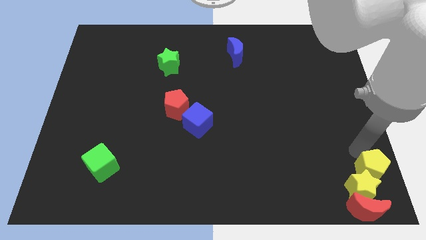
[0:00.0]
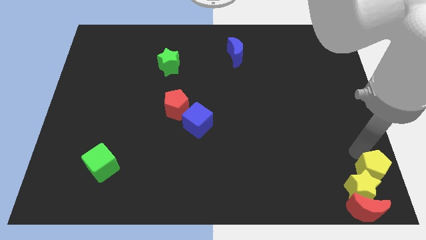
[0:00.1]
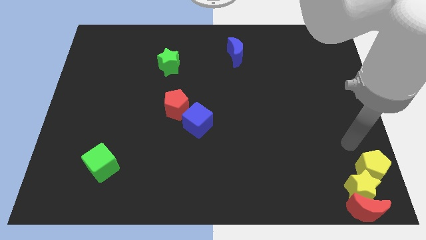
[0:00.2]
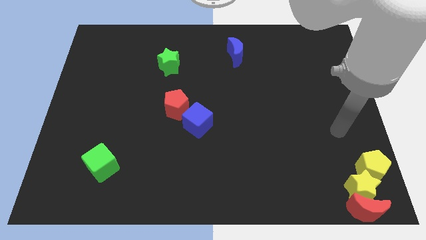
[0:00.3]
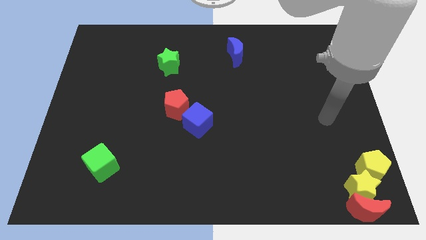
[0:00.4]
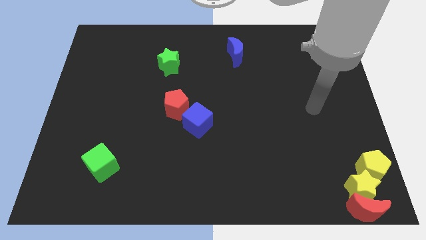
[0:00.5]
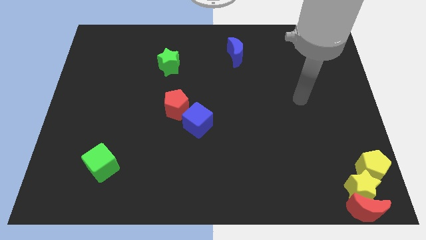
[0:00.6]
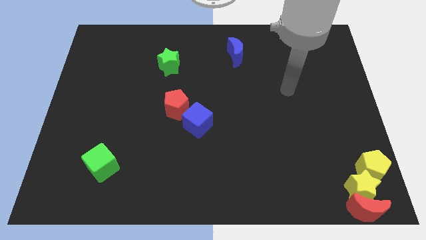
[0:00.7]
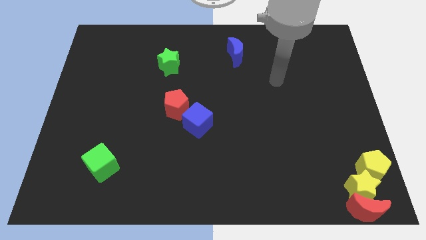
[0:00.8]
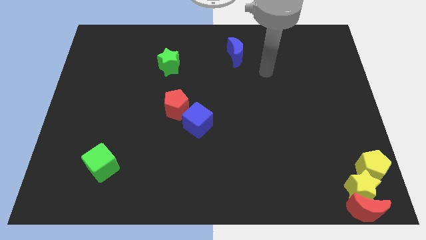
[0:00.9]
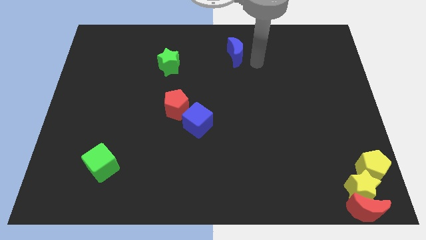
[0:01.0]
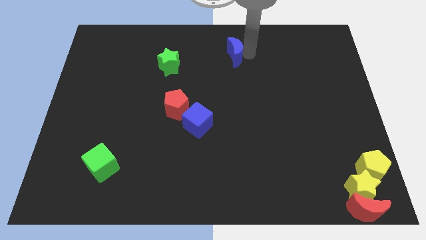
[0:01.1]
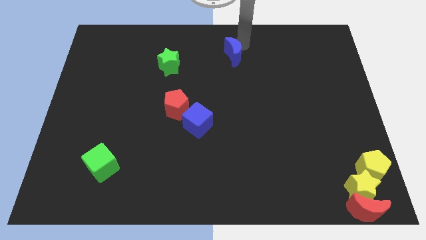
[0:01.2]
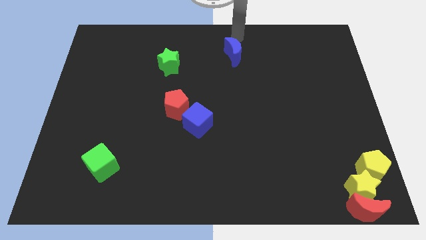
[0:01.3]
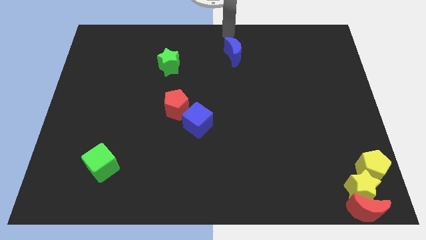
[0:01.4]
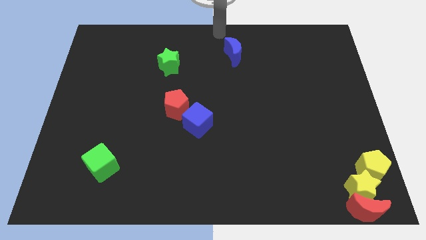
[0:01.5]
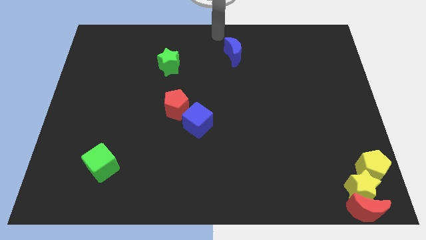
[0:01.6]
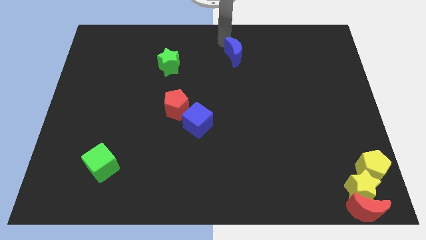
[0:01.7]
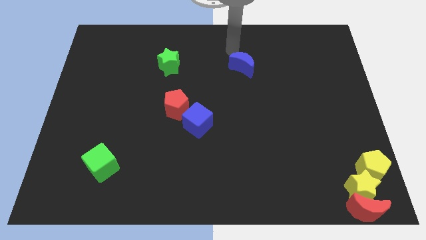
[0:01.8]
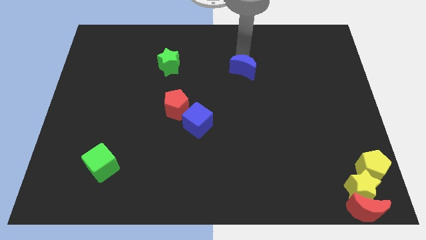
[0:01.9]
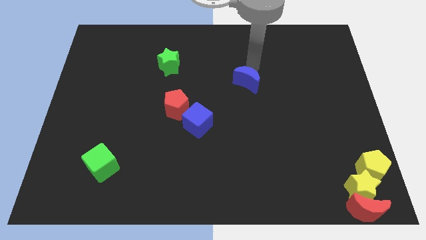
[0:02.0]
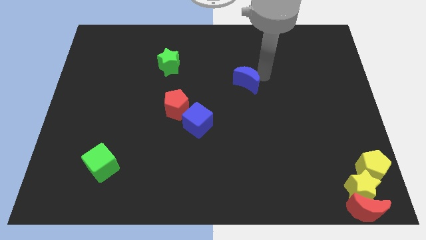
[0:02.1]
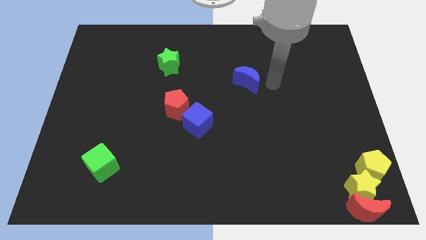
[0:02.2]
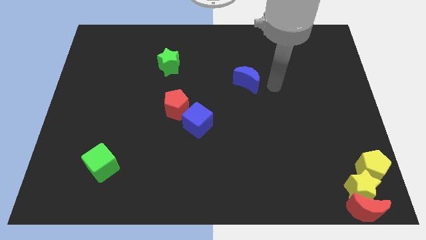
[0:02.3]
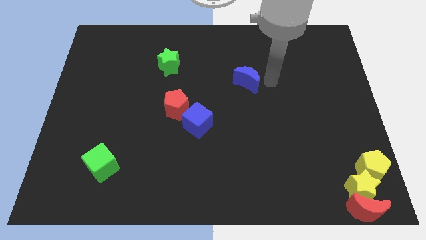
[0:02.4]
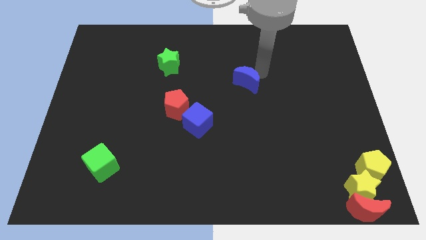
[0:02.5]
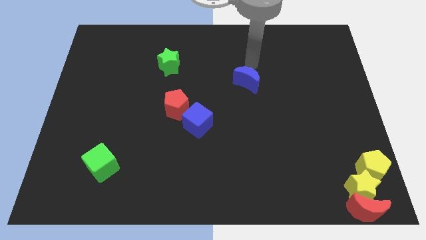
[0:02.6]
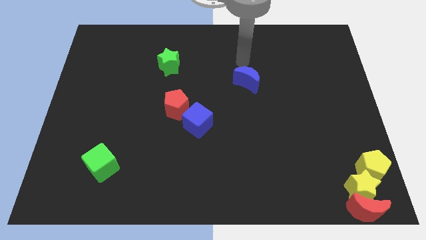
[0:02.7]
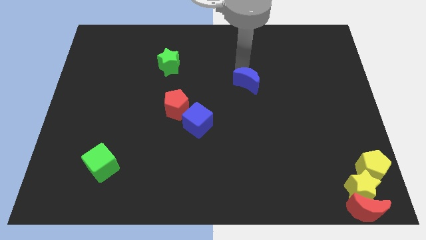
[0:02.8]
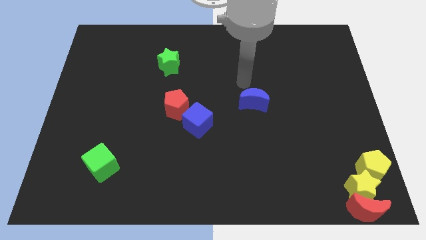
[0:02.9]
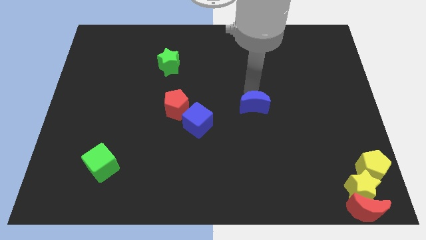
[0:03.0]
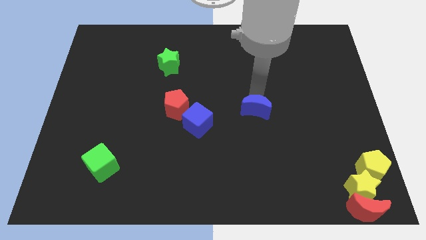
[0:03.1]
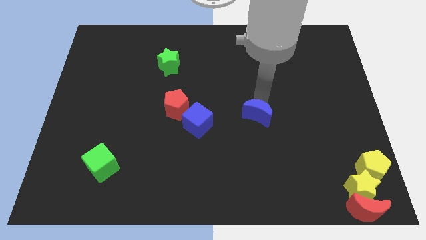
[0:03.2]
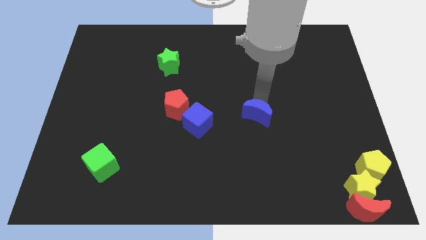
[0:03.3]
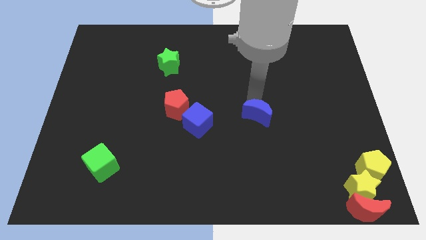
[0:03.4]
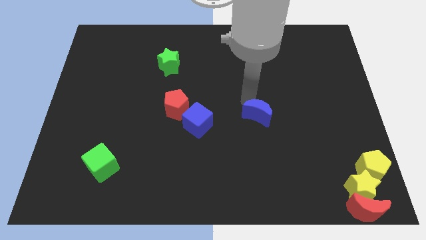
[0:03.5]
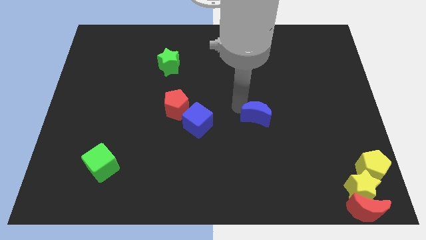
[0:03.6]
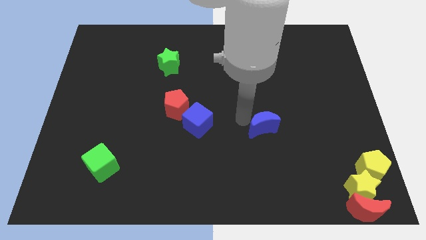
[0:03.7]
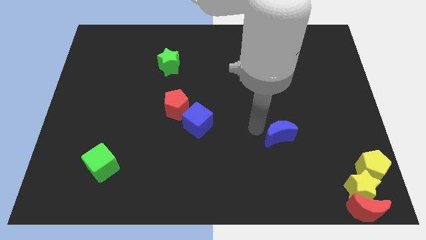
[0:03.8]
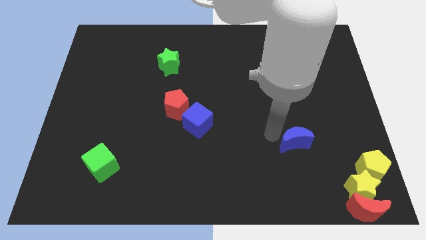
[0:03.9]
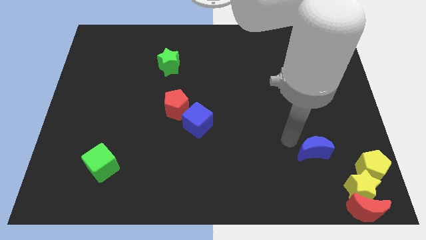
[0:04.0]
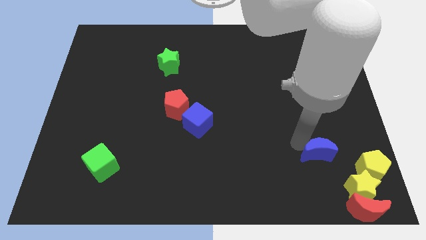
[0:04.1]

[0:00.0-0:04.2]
move your arm towards the top left side of the blue moon

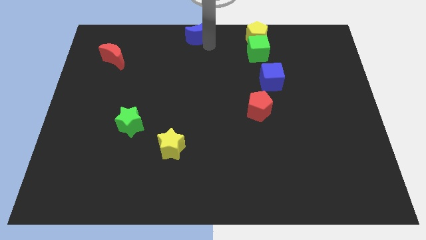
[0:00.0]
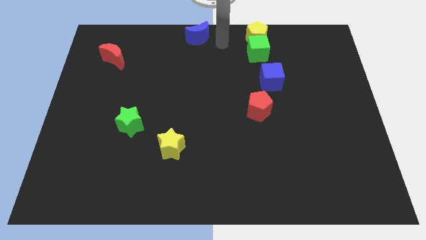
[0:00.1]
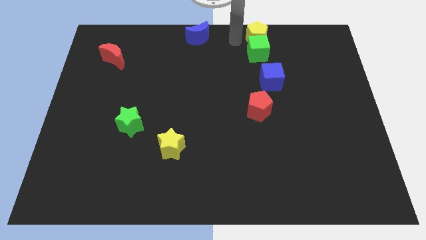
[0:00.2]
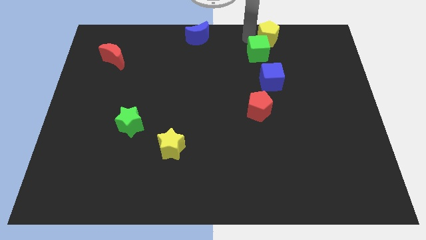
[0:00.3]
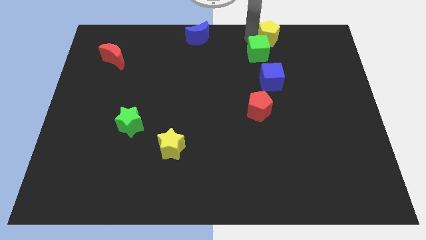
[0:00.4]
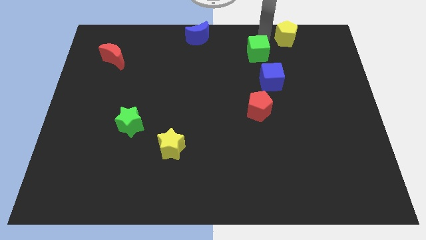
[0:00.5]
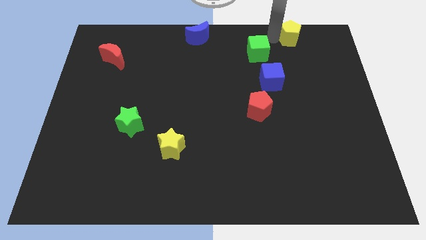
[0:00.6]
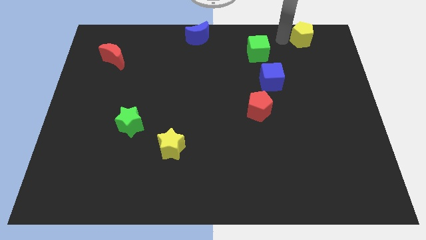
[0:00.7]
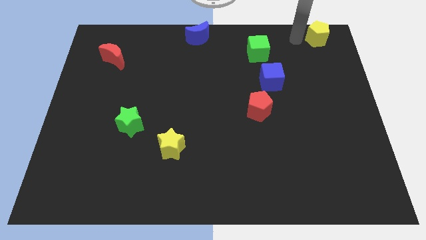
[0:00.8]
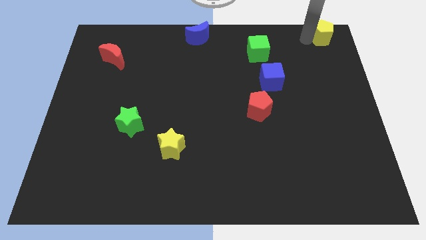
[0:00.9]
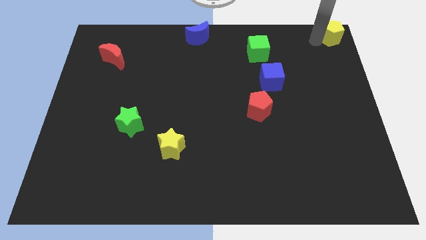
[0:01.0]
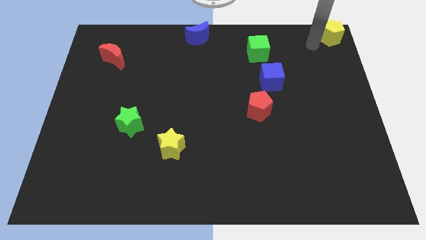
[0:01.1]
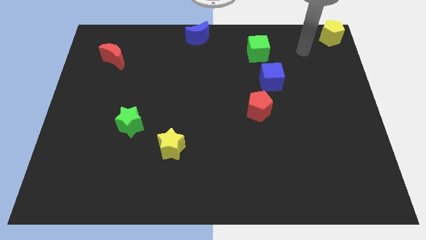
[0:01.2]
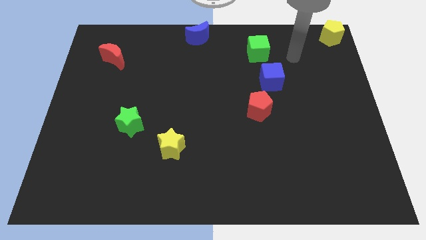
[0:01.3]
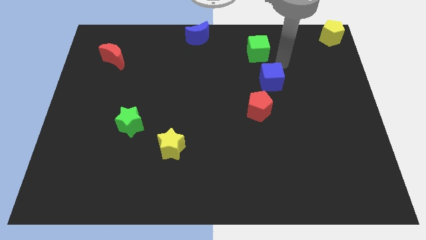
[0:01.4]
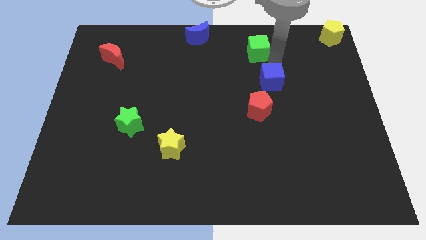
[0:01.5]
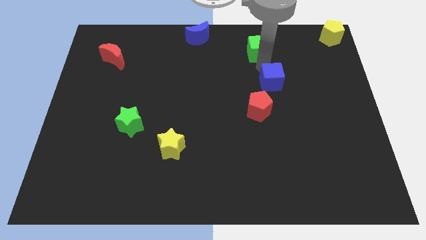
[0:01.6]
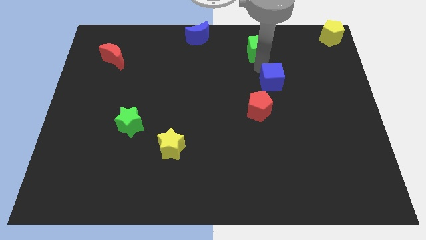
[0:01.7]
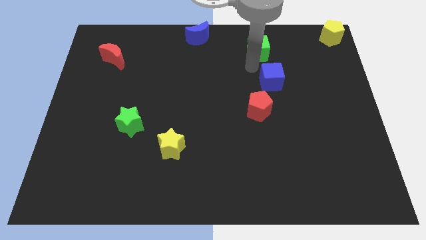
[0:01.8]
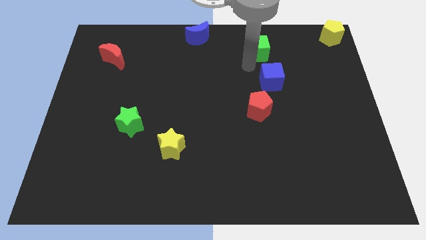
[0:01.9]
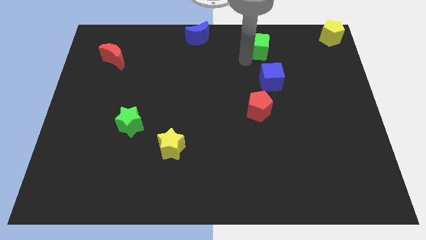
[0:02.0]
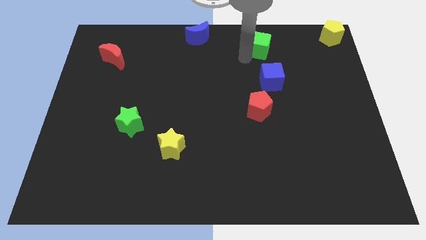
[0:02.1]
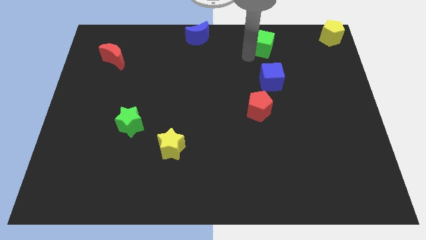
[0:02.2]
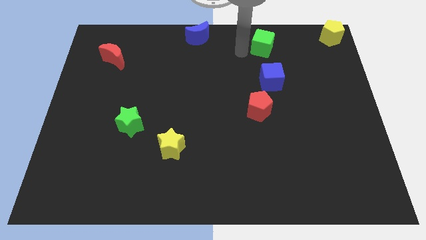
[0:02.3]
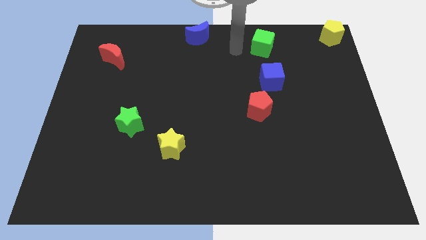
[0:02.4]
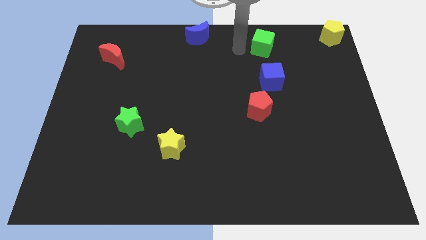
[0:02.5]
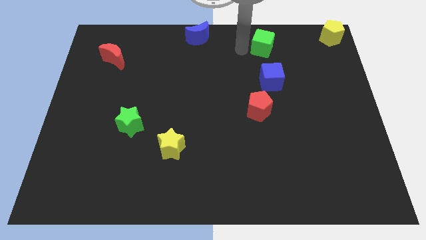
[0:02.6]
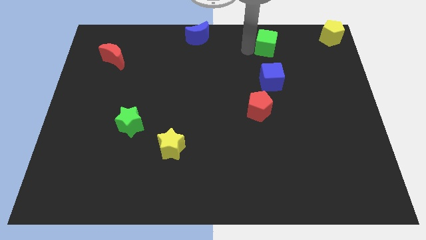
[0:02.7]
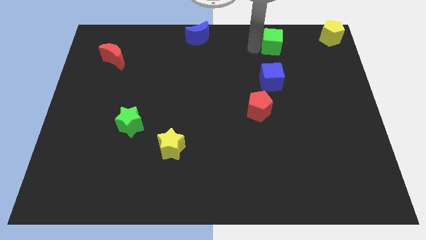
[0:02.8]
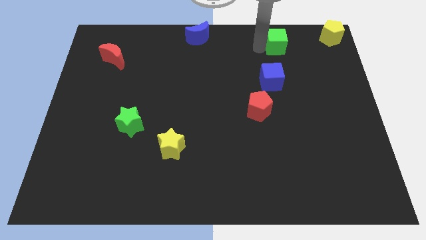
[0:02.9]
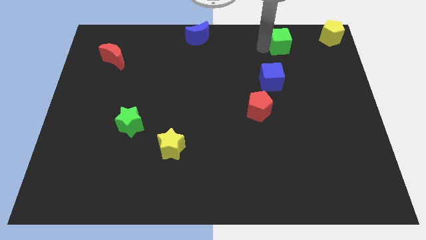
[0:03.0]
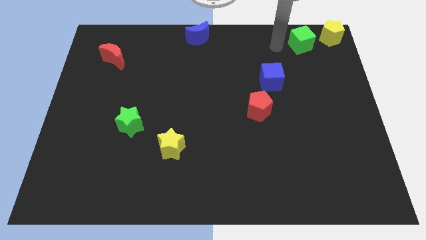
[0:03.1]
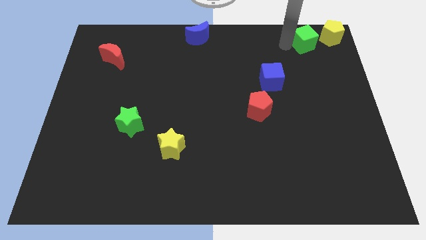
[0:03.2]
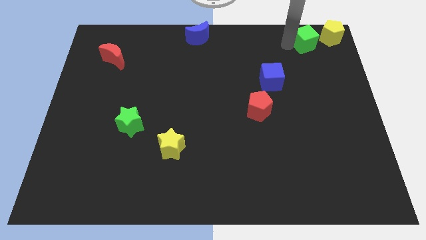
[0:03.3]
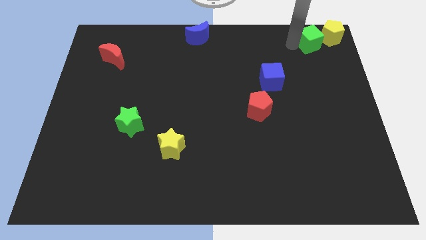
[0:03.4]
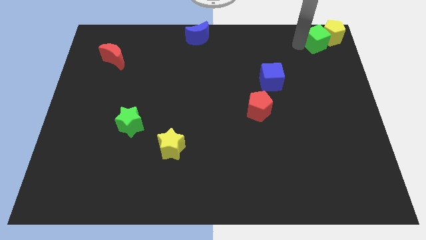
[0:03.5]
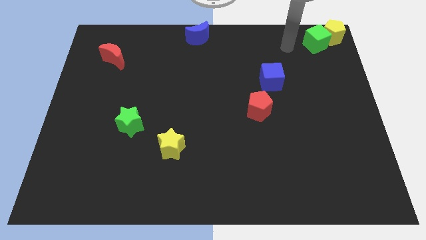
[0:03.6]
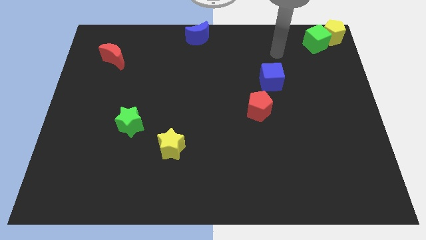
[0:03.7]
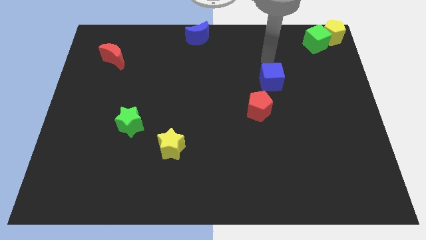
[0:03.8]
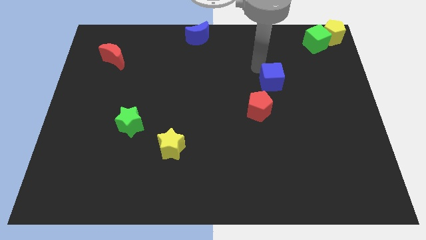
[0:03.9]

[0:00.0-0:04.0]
push the yellow pentagon and green cube to the top right corner of the board

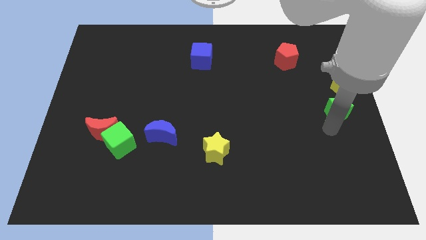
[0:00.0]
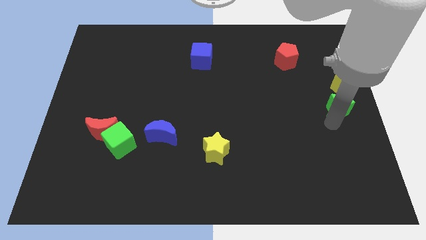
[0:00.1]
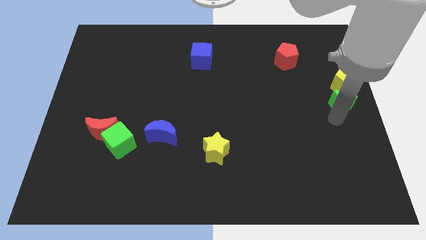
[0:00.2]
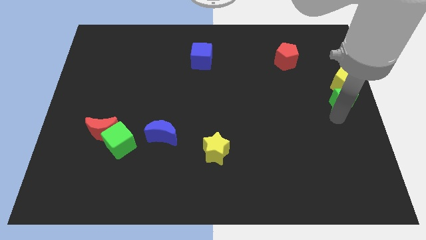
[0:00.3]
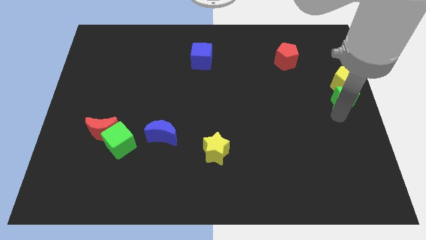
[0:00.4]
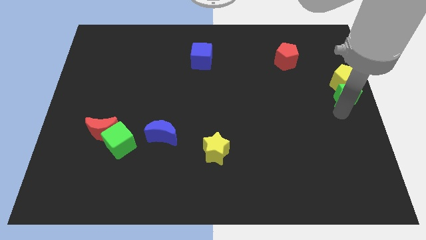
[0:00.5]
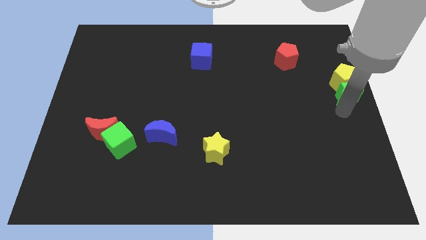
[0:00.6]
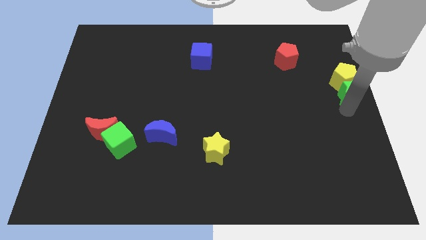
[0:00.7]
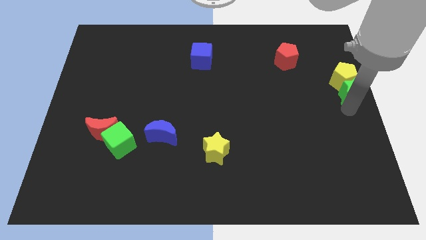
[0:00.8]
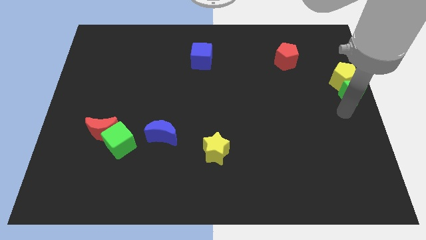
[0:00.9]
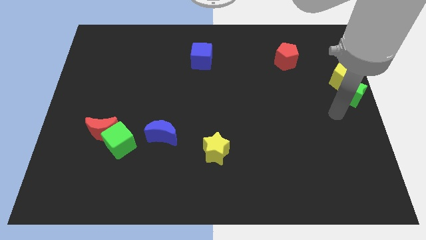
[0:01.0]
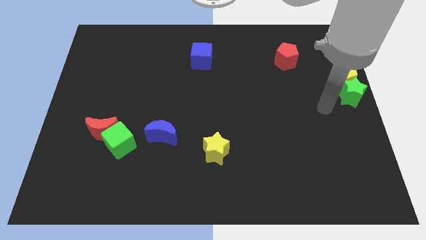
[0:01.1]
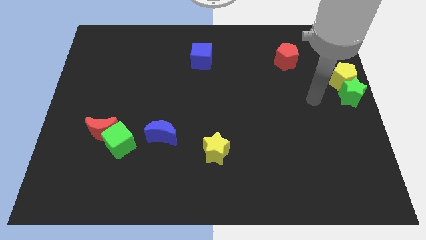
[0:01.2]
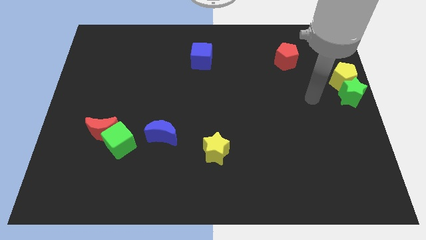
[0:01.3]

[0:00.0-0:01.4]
move the green star into the yellow pentagon
